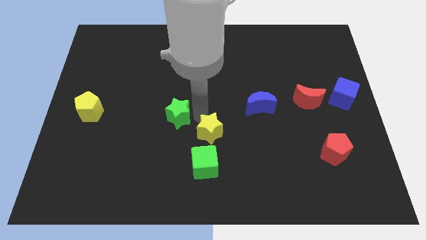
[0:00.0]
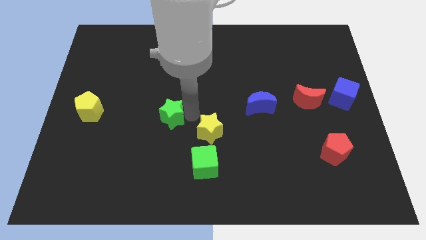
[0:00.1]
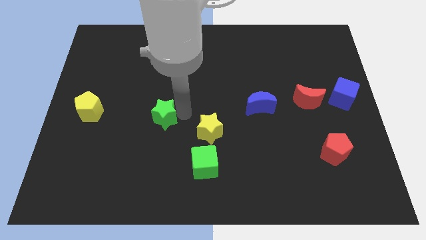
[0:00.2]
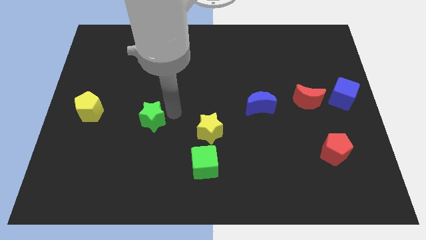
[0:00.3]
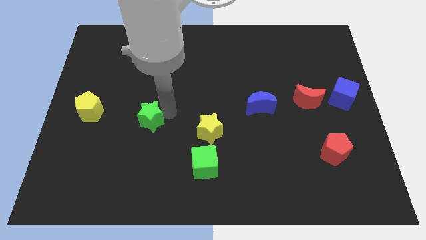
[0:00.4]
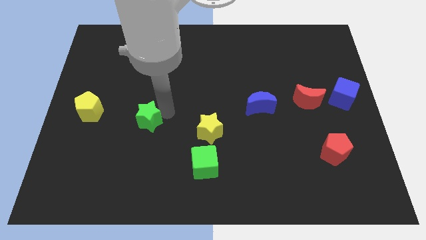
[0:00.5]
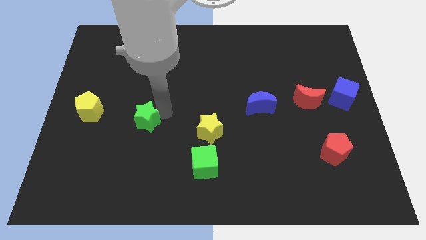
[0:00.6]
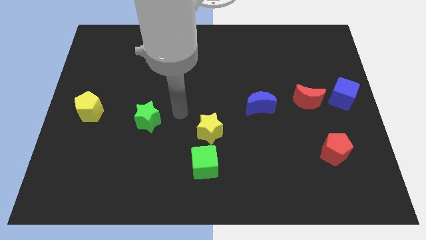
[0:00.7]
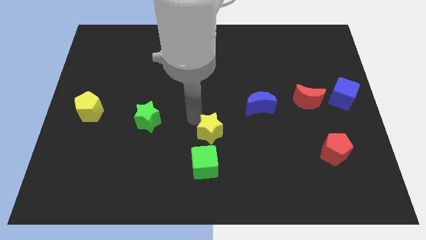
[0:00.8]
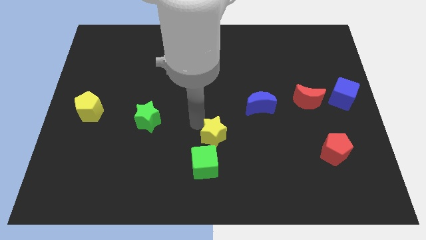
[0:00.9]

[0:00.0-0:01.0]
push the green star to the left

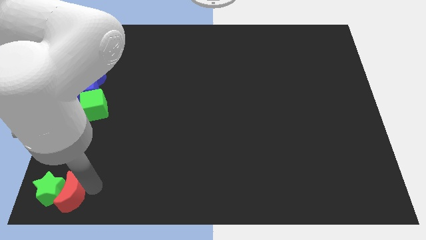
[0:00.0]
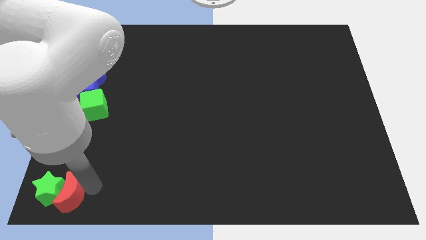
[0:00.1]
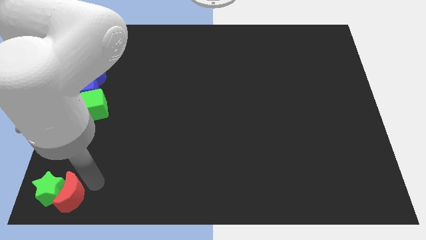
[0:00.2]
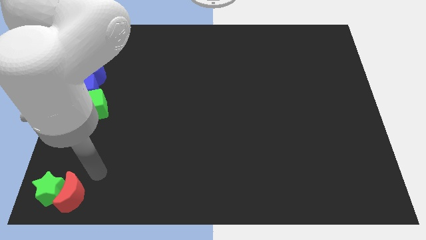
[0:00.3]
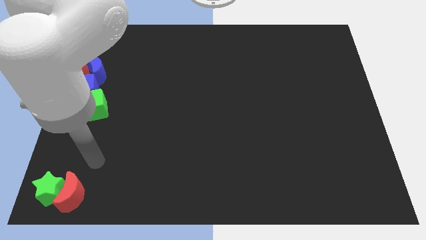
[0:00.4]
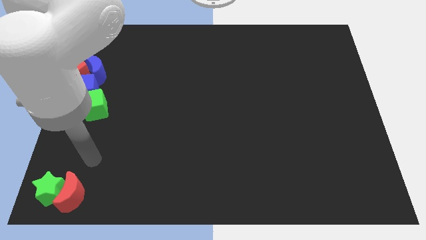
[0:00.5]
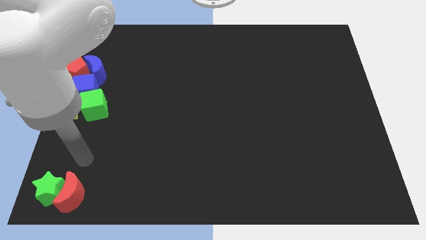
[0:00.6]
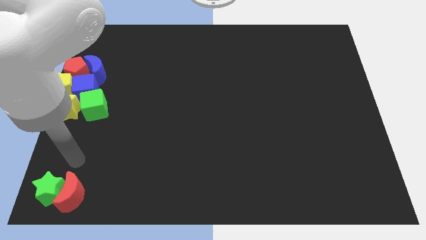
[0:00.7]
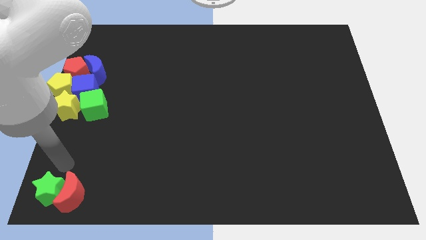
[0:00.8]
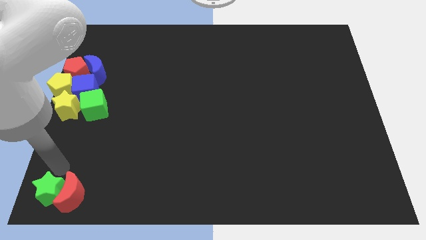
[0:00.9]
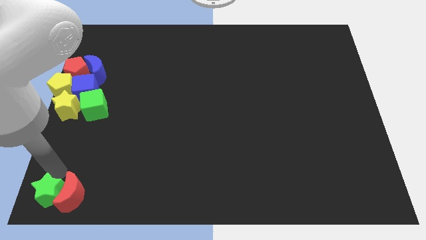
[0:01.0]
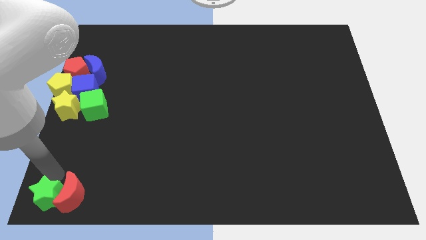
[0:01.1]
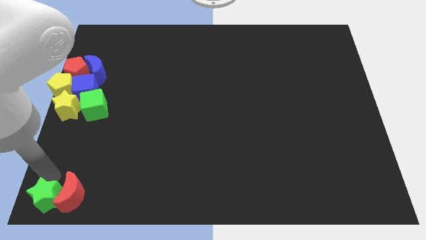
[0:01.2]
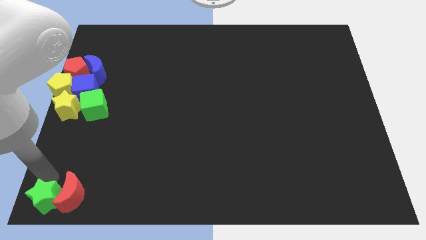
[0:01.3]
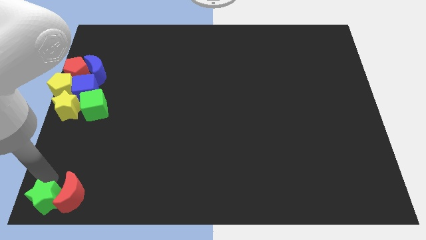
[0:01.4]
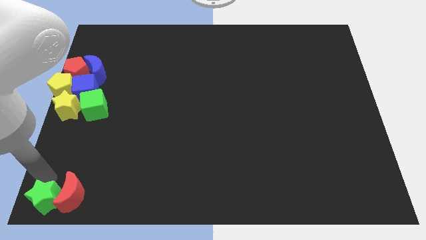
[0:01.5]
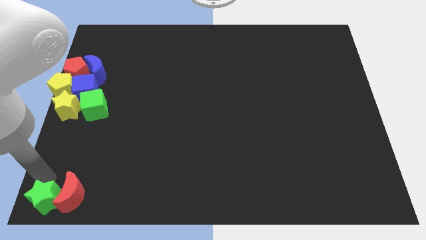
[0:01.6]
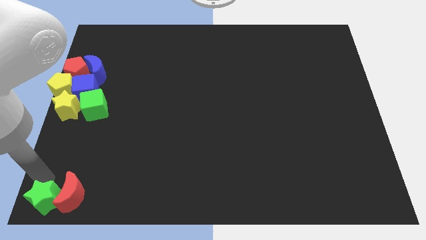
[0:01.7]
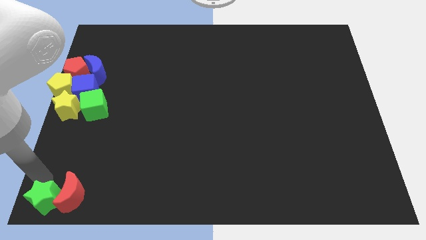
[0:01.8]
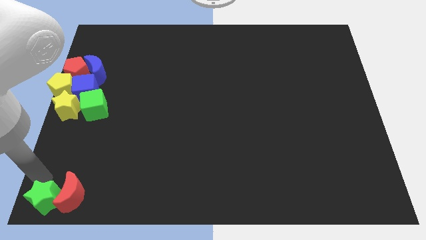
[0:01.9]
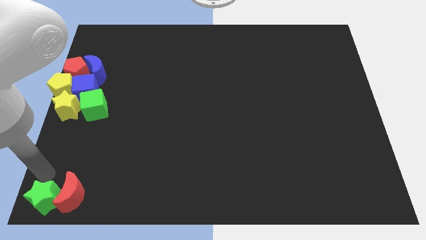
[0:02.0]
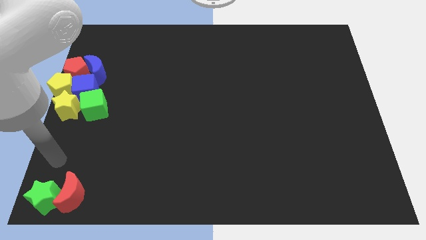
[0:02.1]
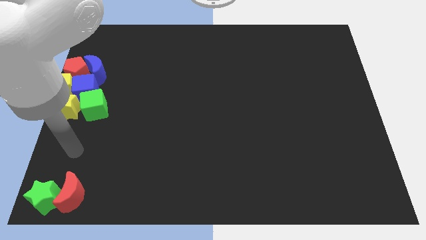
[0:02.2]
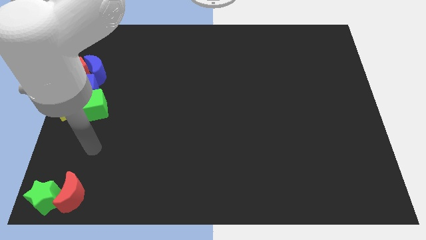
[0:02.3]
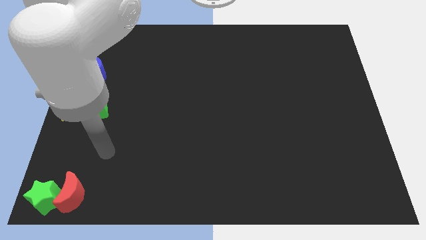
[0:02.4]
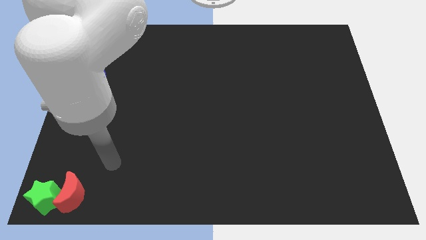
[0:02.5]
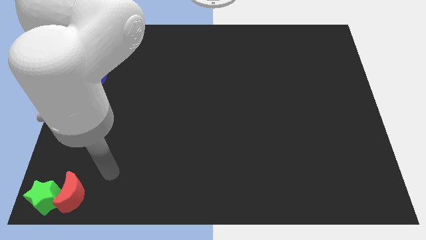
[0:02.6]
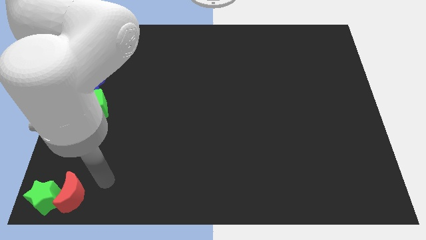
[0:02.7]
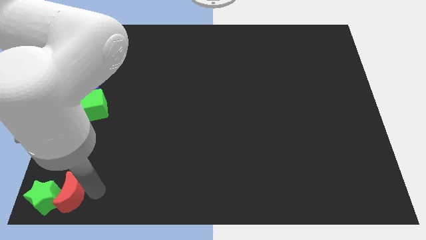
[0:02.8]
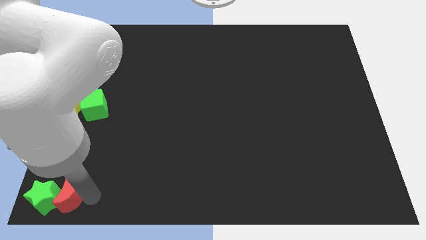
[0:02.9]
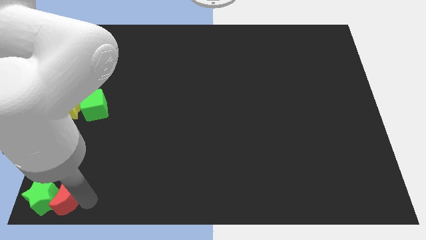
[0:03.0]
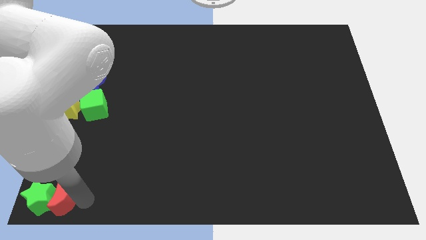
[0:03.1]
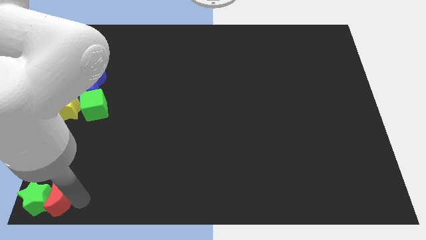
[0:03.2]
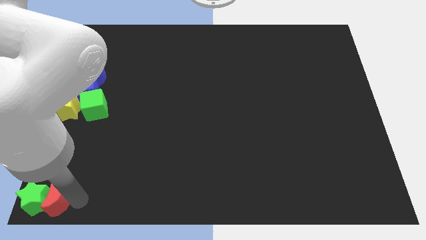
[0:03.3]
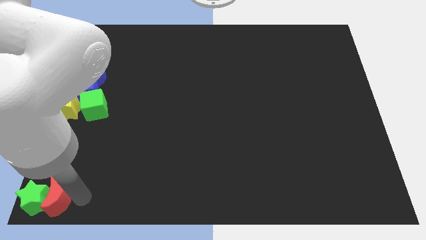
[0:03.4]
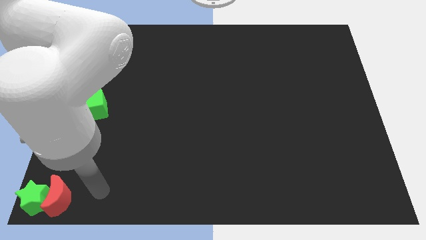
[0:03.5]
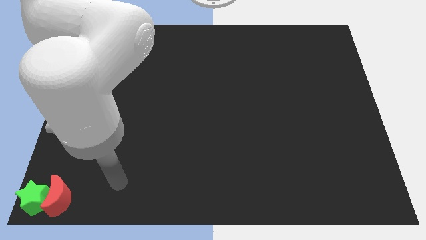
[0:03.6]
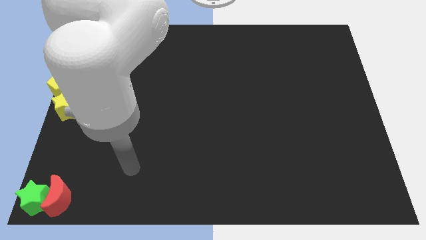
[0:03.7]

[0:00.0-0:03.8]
place the red crescent and green cube at the bottom left corner of the board

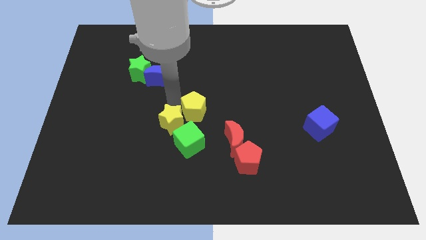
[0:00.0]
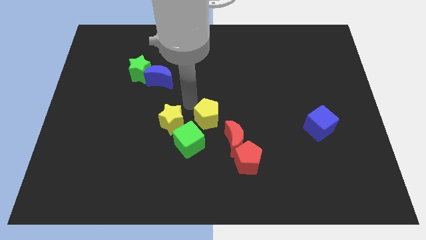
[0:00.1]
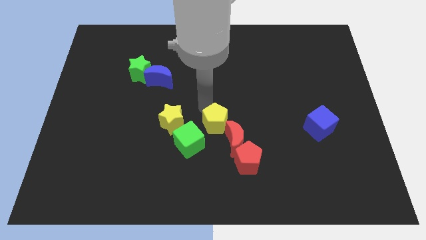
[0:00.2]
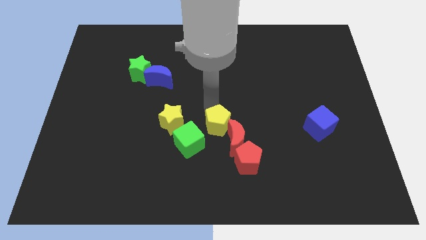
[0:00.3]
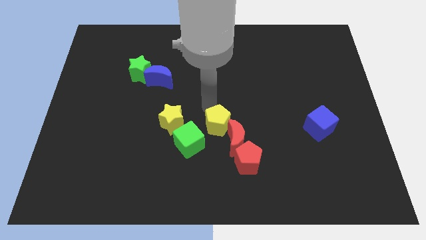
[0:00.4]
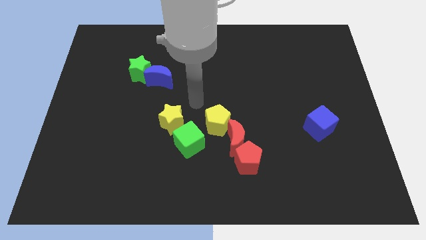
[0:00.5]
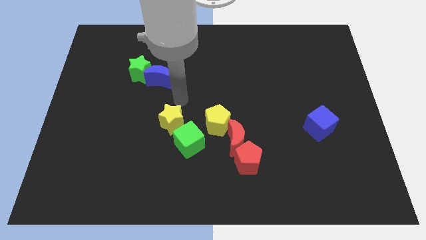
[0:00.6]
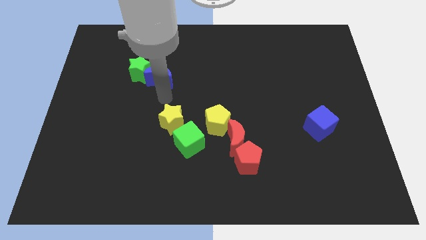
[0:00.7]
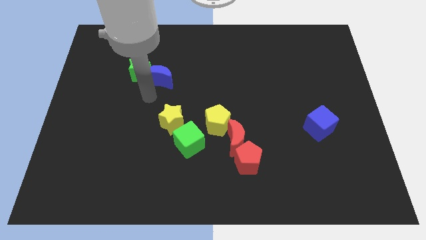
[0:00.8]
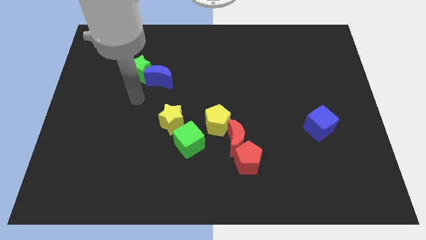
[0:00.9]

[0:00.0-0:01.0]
push yellow pentagon into red moon

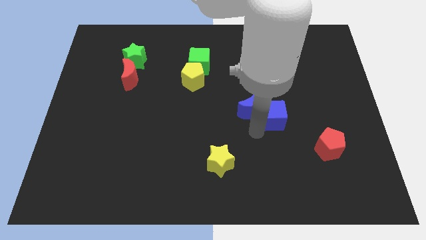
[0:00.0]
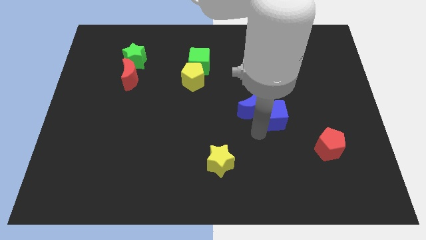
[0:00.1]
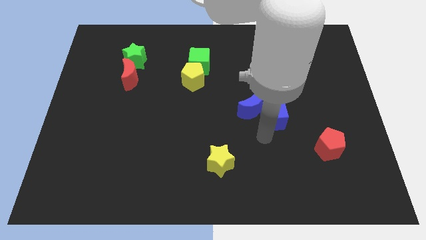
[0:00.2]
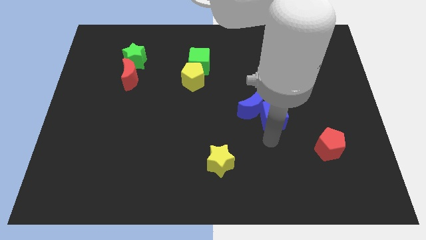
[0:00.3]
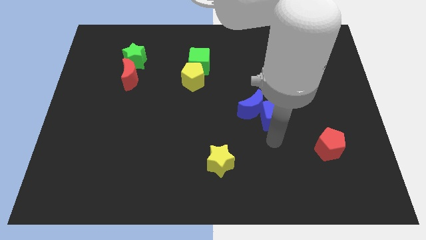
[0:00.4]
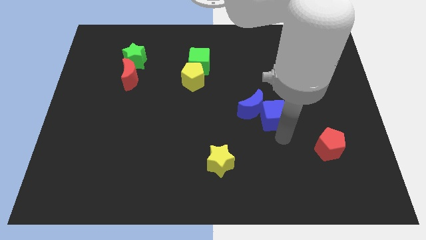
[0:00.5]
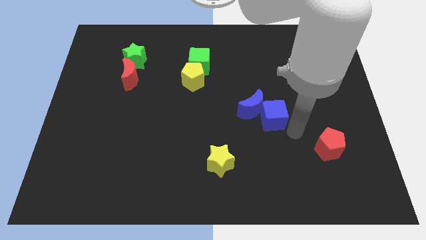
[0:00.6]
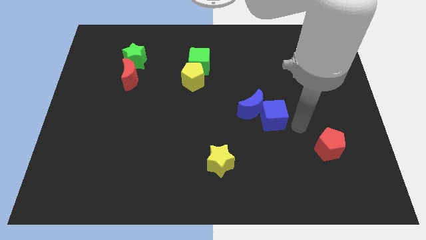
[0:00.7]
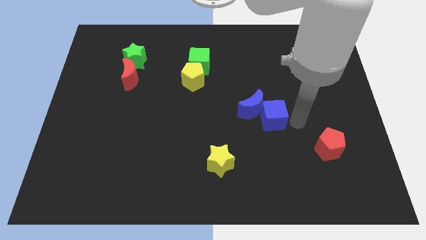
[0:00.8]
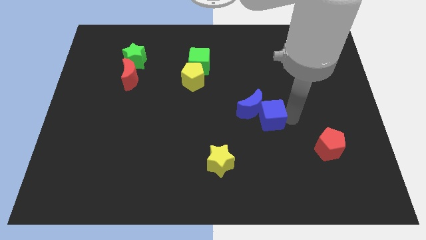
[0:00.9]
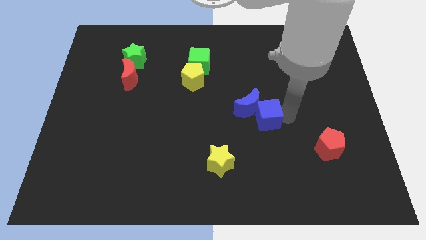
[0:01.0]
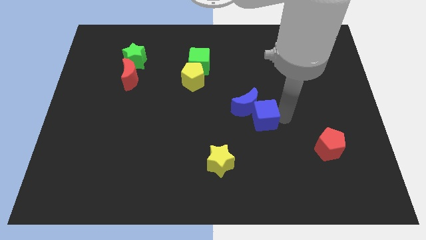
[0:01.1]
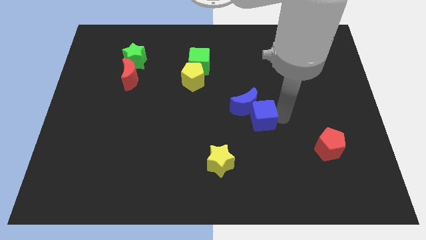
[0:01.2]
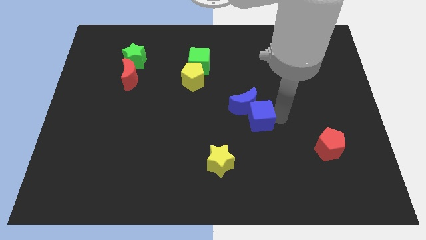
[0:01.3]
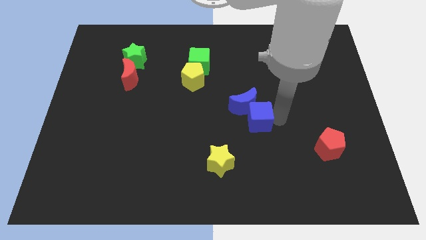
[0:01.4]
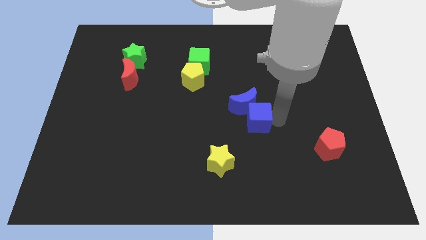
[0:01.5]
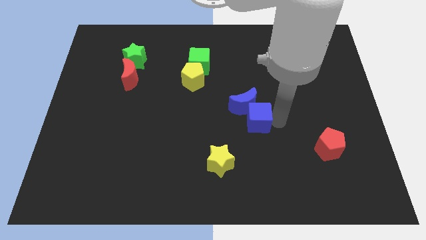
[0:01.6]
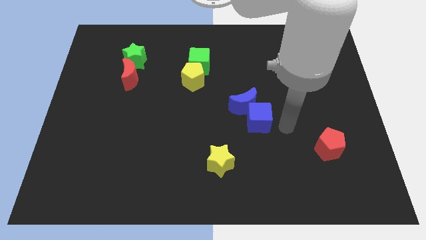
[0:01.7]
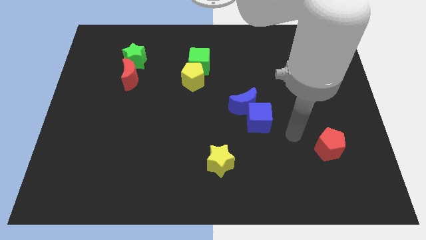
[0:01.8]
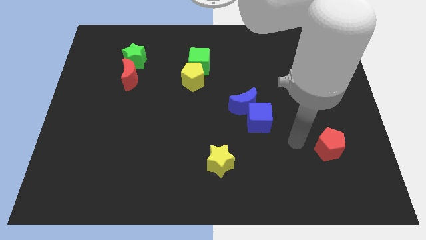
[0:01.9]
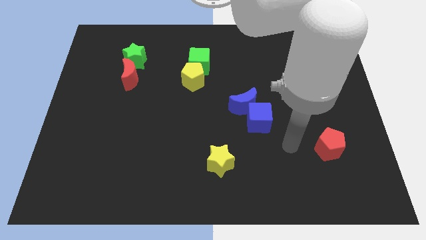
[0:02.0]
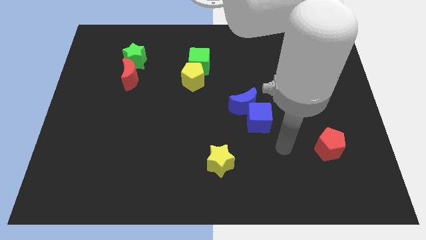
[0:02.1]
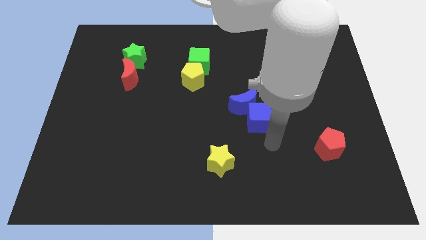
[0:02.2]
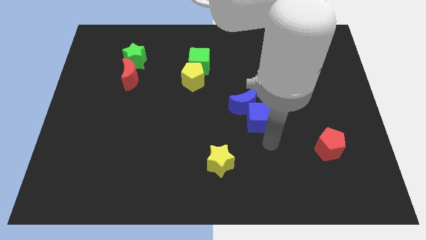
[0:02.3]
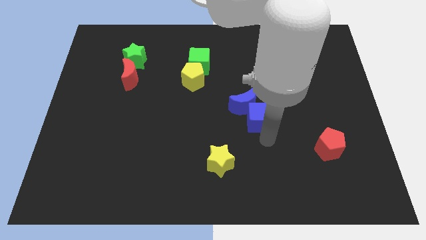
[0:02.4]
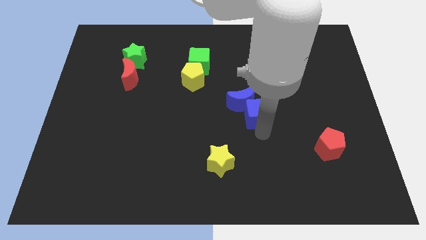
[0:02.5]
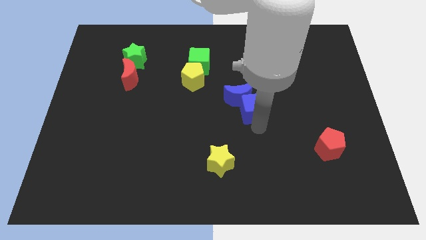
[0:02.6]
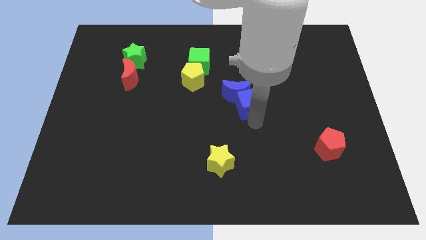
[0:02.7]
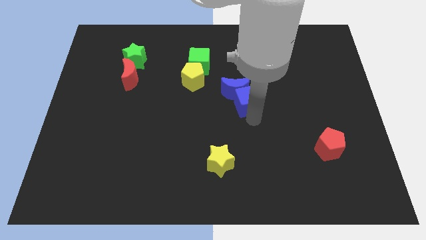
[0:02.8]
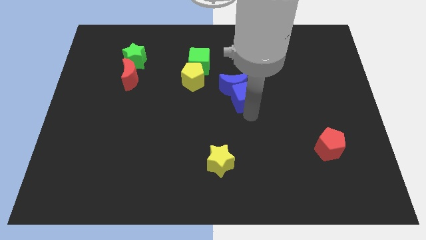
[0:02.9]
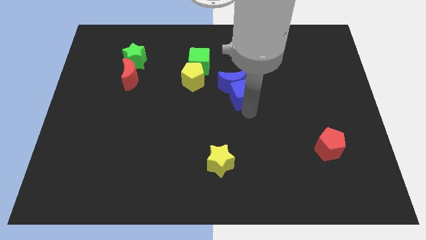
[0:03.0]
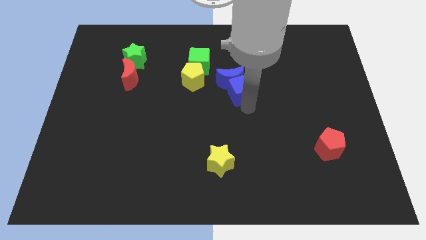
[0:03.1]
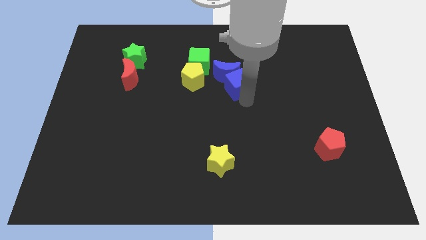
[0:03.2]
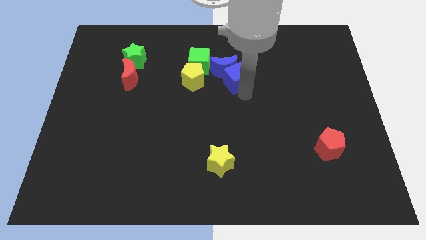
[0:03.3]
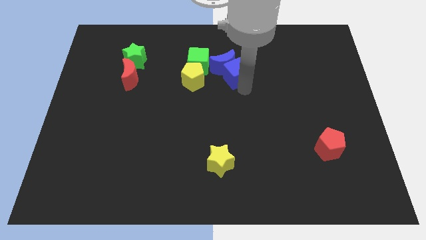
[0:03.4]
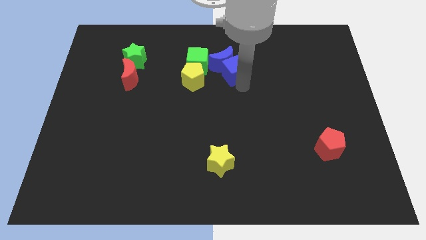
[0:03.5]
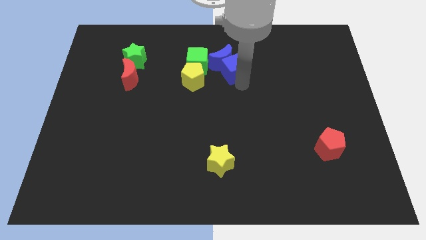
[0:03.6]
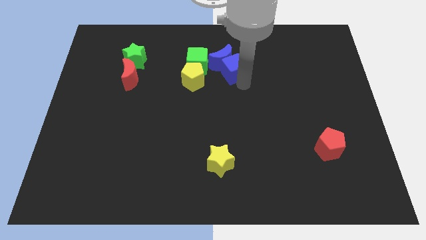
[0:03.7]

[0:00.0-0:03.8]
push the blue cube and blue crescent into the green cube
